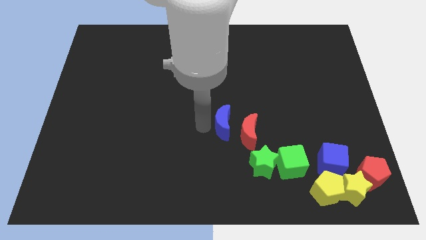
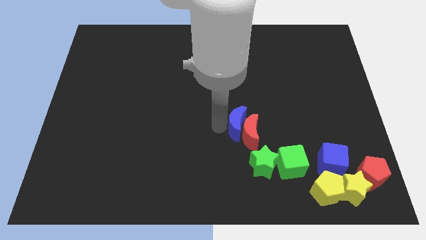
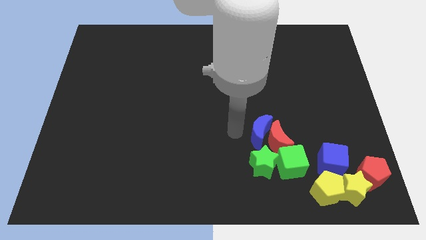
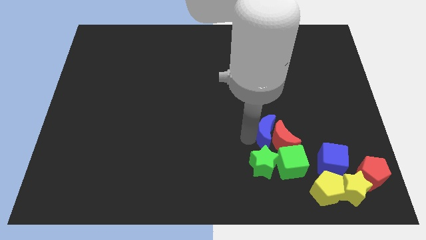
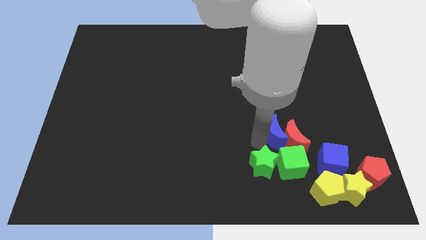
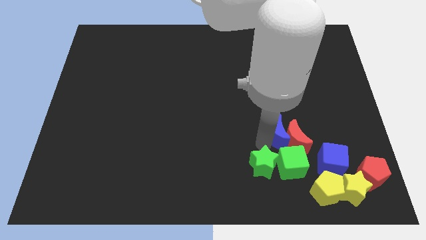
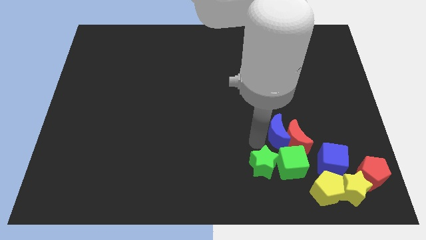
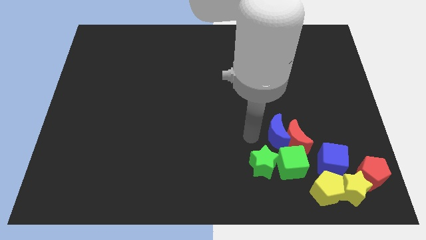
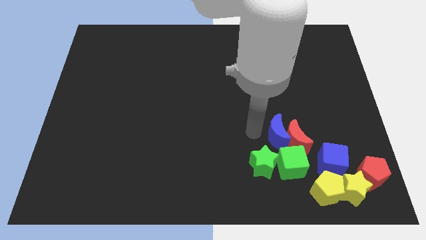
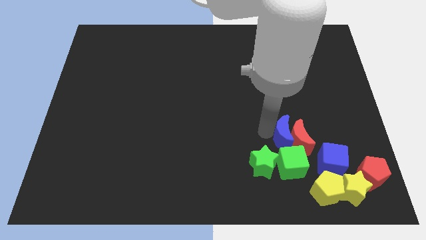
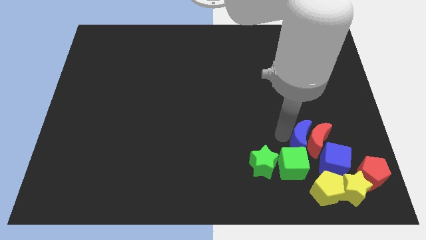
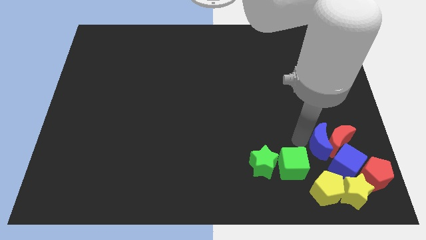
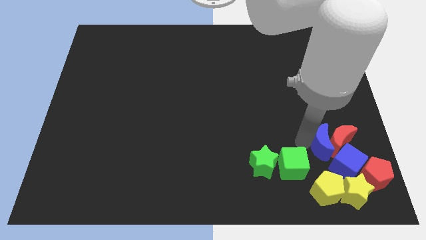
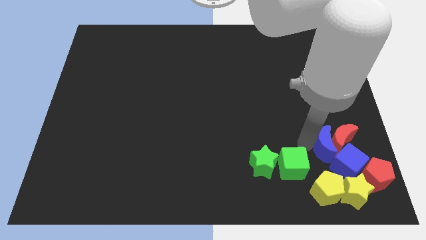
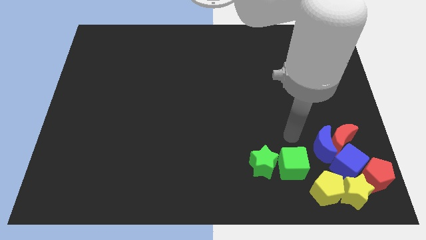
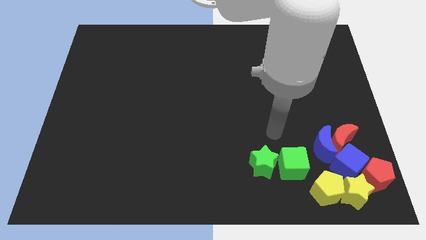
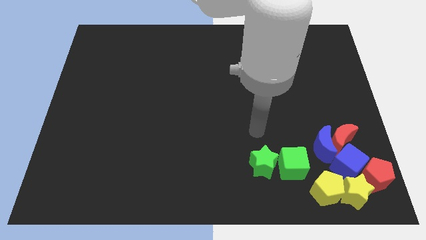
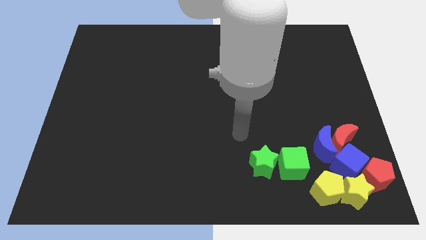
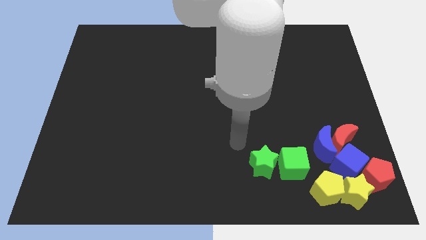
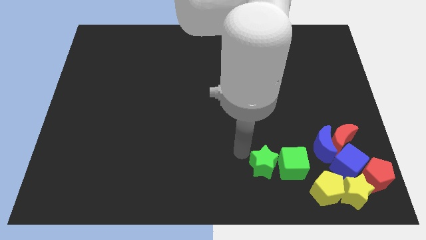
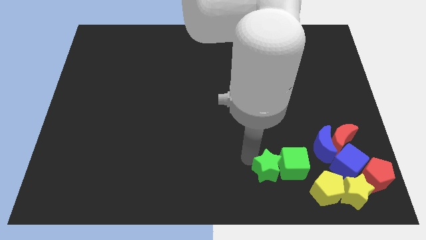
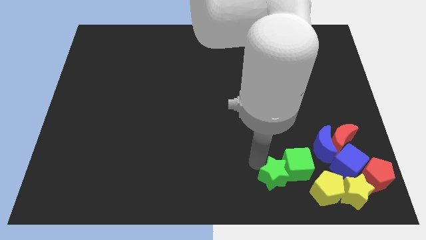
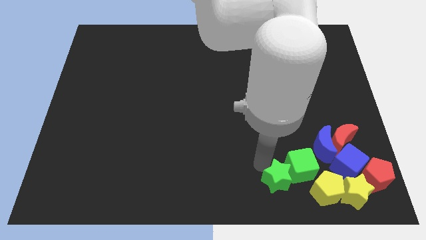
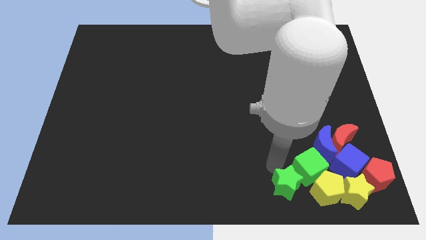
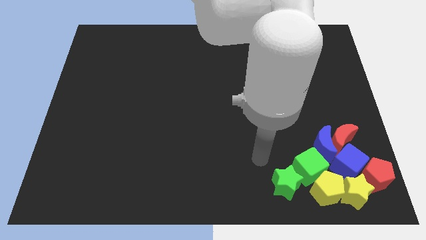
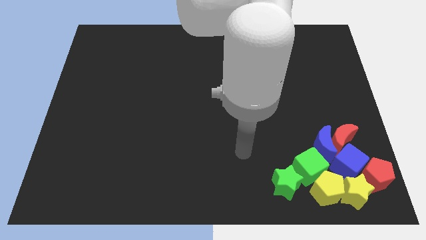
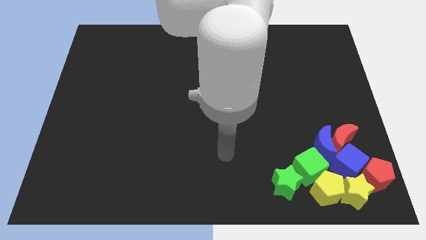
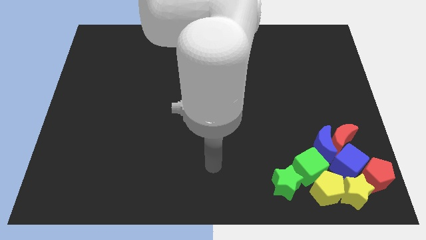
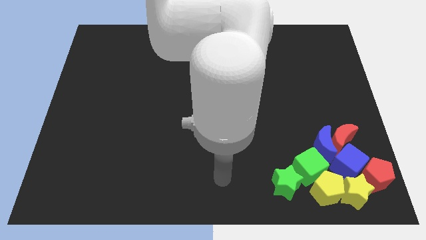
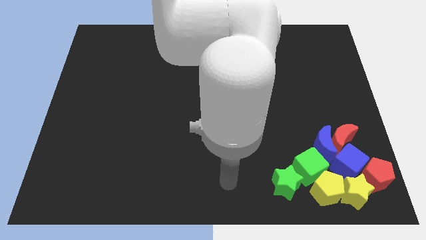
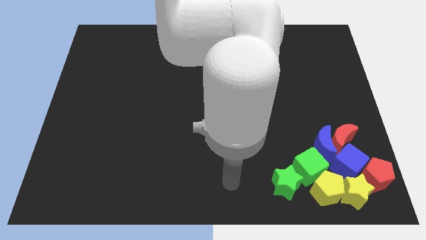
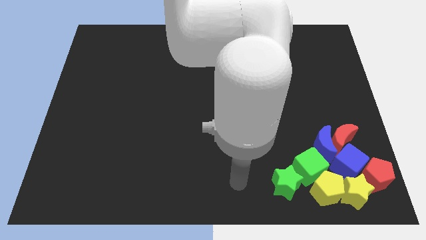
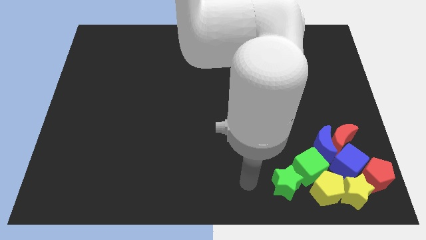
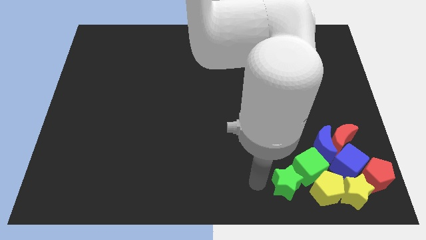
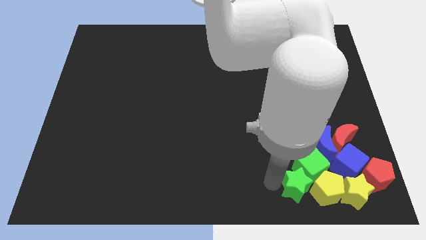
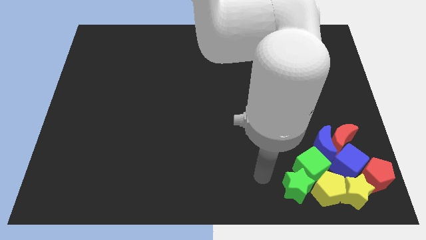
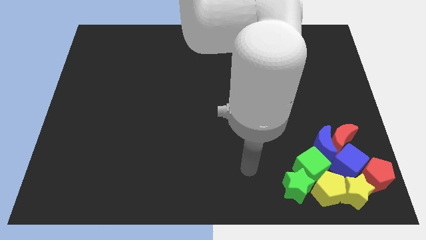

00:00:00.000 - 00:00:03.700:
arrange all the blocks at the bottom right corner of the board

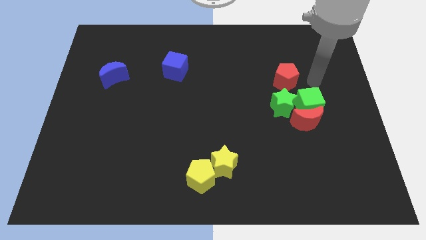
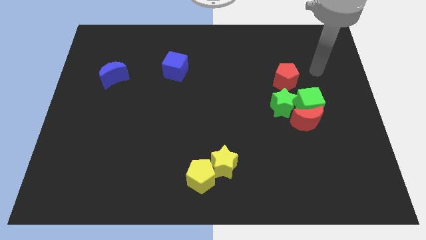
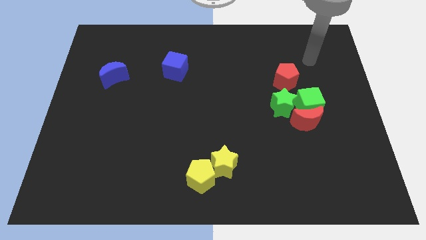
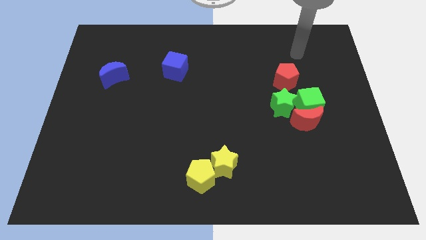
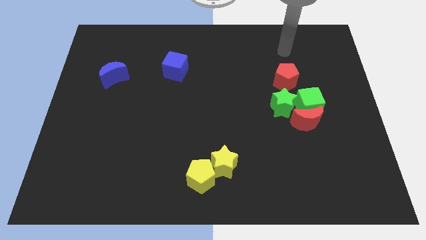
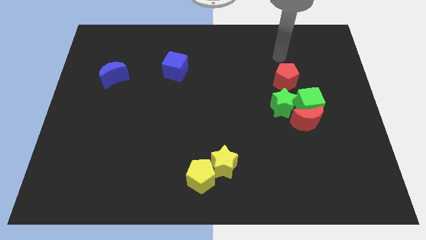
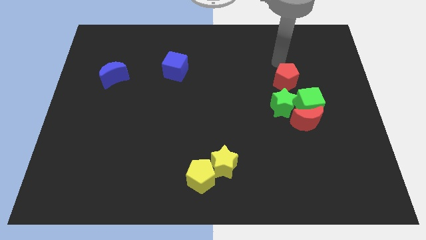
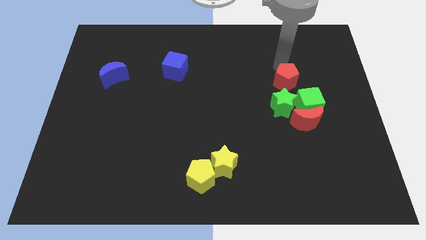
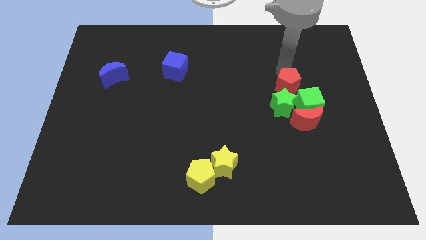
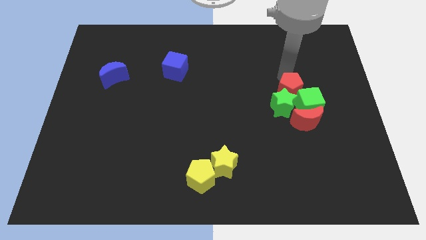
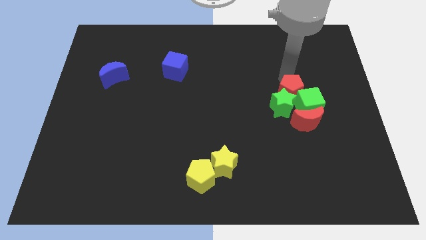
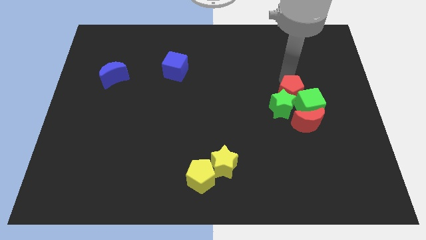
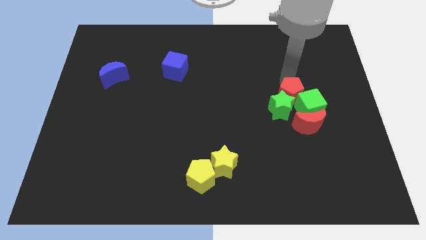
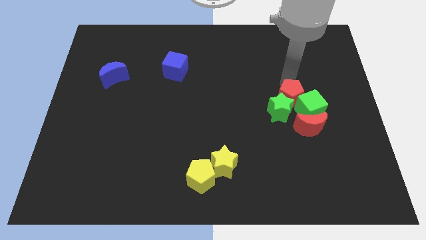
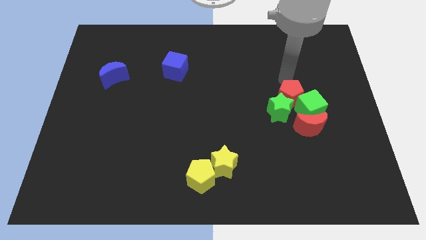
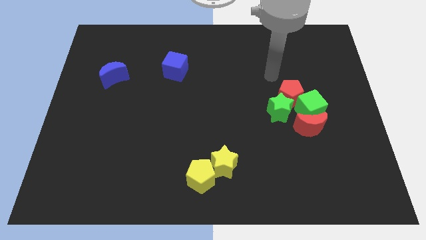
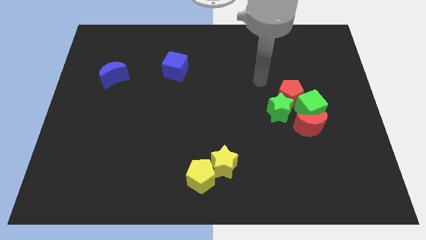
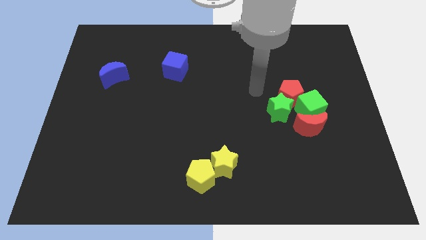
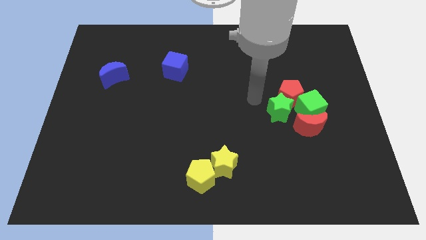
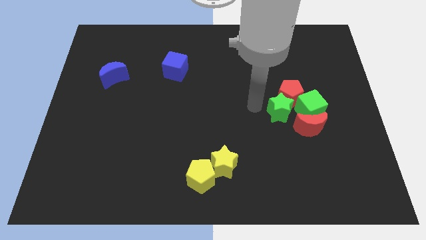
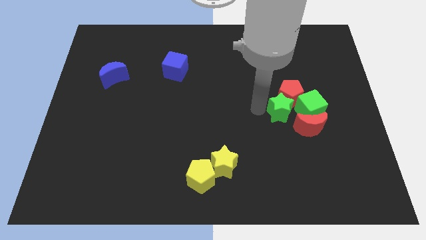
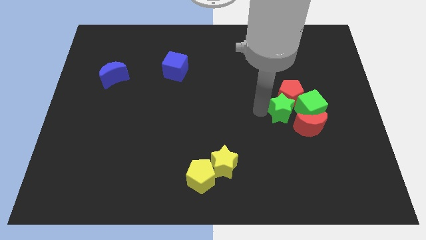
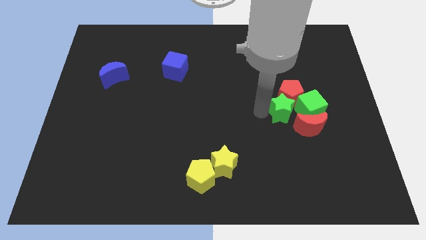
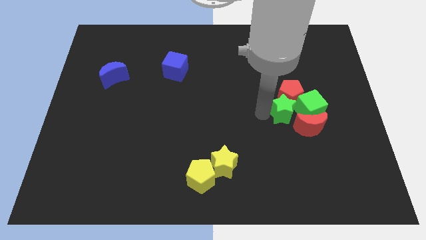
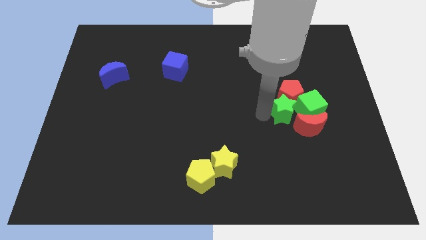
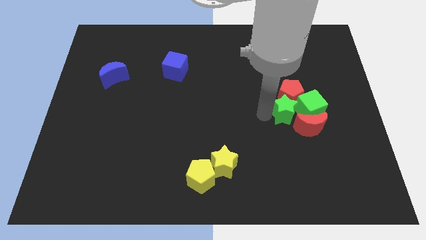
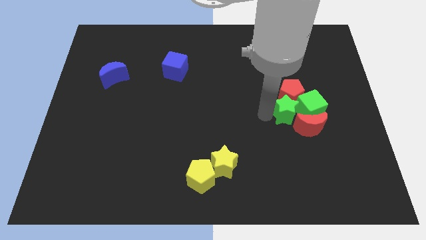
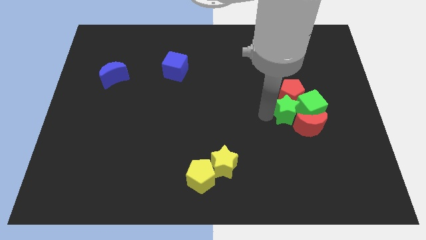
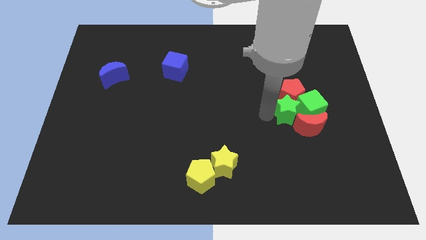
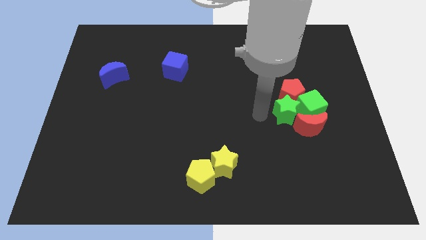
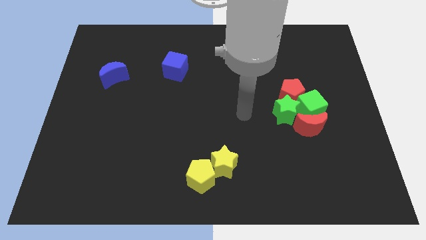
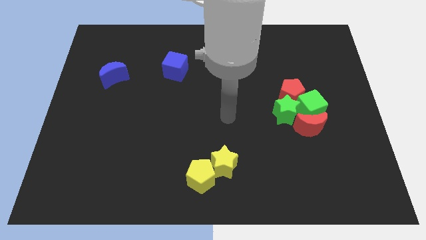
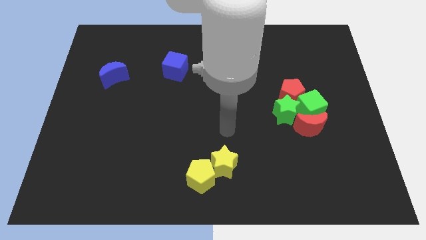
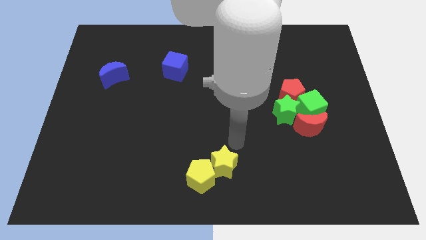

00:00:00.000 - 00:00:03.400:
push the red pentagon and green star into the group of blocks

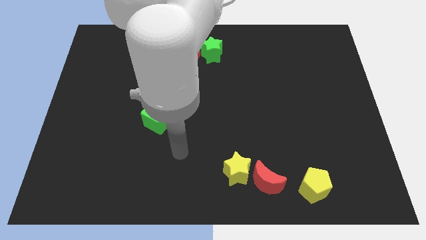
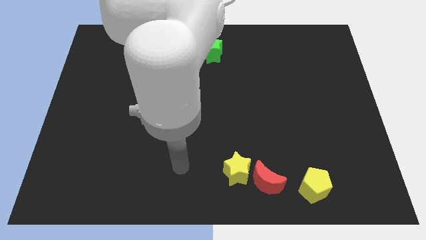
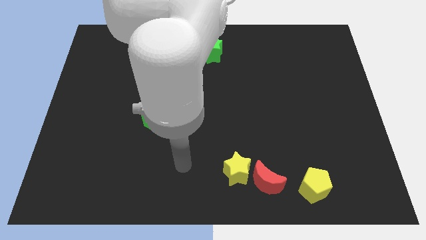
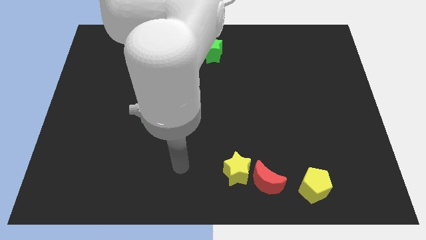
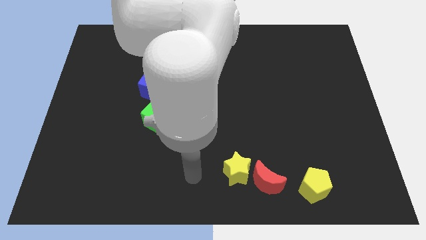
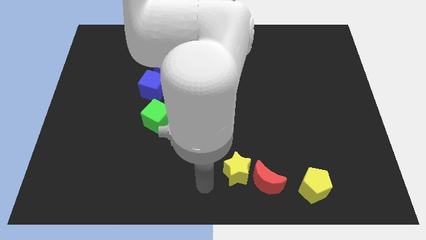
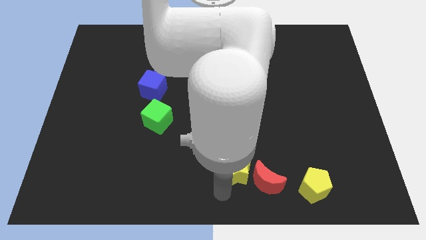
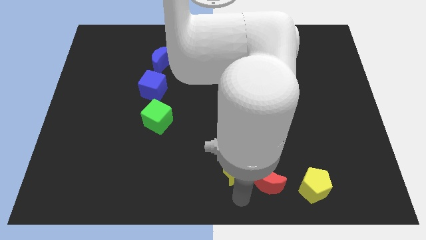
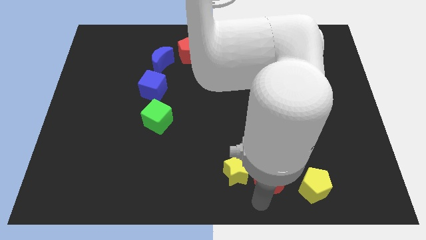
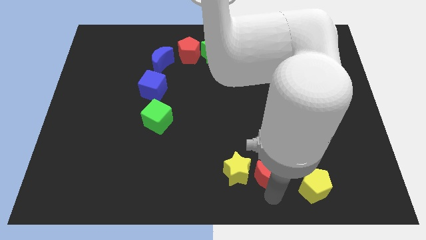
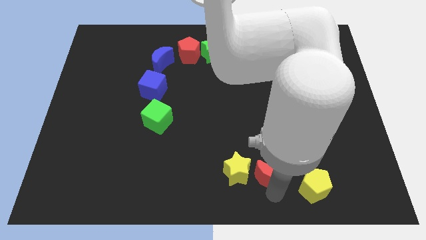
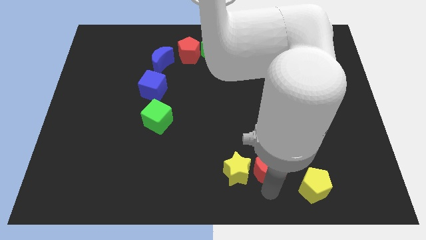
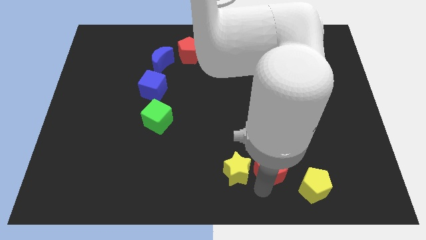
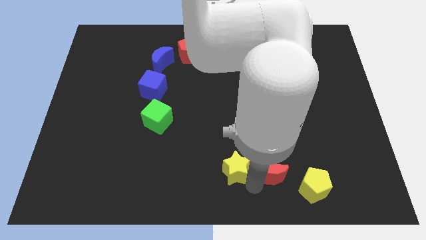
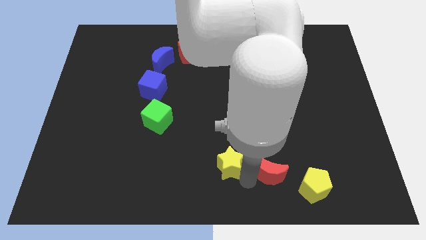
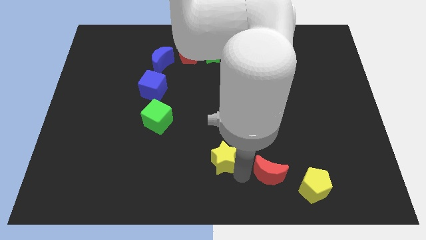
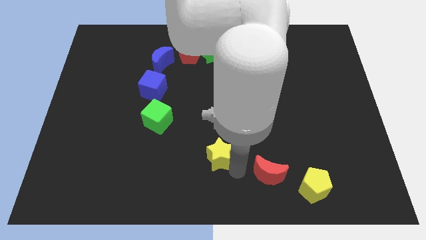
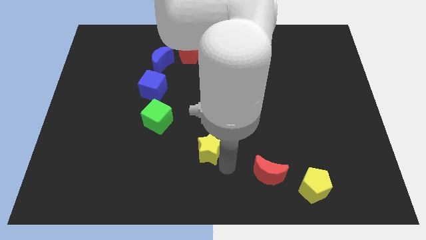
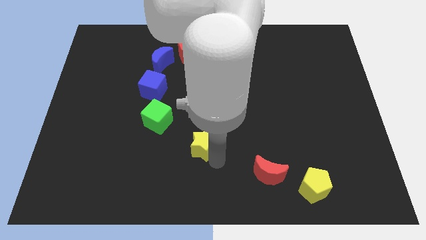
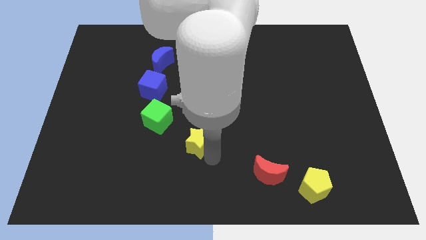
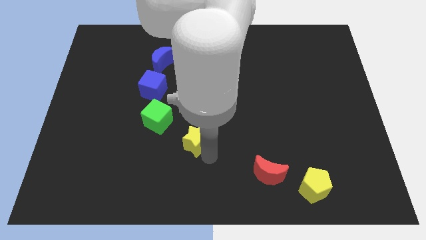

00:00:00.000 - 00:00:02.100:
place the yellow star in between the green cube and red moon
